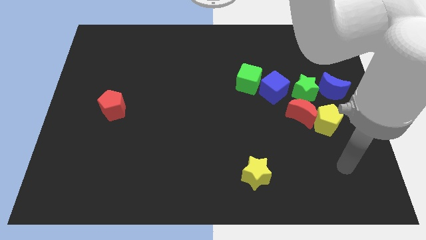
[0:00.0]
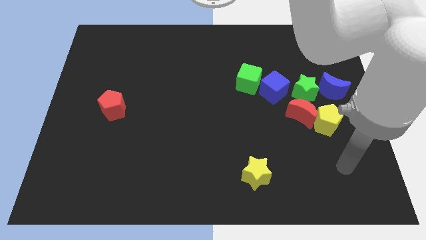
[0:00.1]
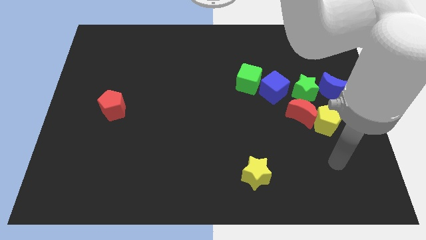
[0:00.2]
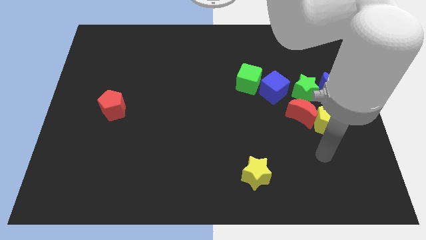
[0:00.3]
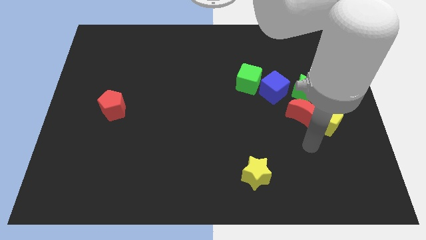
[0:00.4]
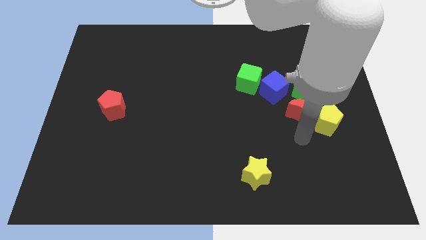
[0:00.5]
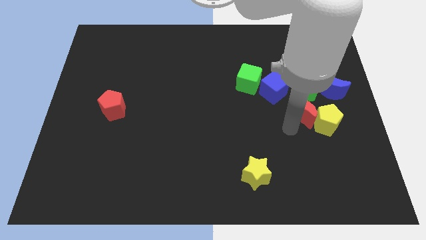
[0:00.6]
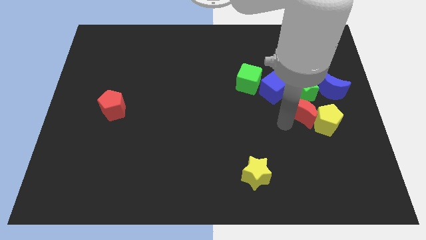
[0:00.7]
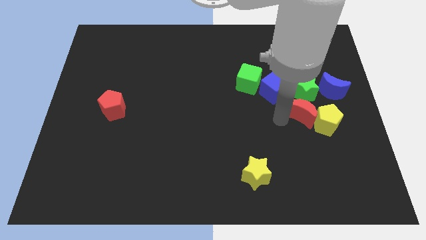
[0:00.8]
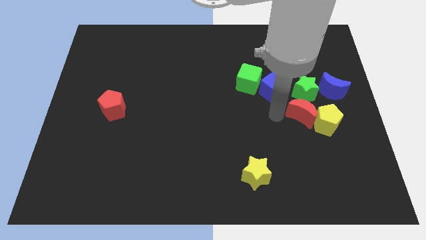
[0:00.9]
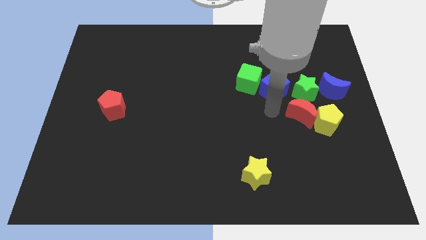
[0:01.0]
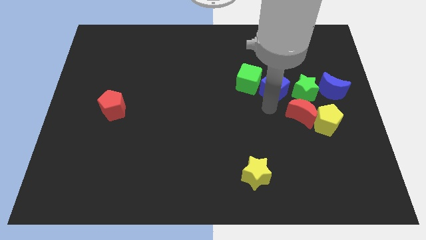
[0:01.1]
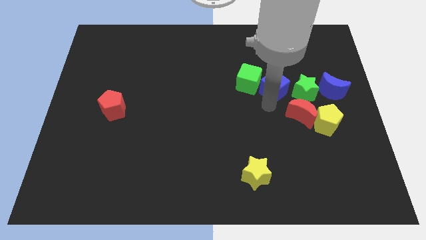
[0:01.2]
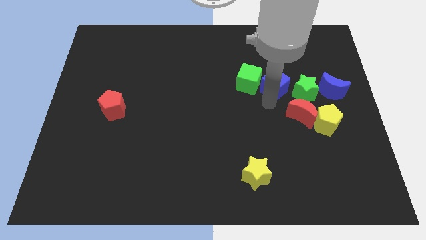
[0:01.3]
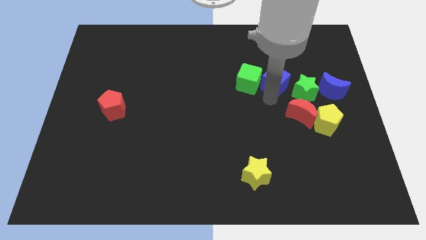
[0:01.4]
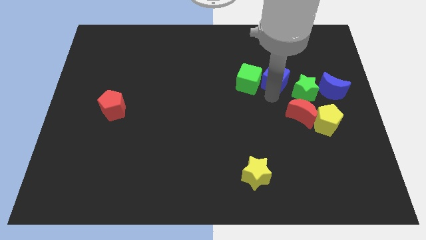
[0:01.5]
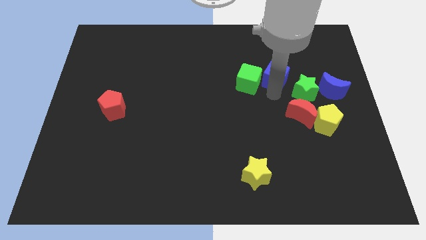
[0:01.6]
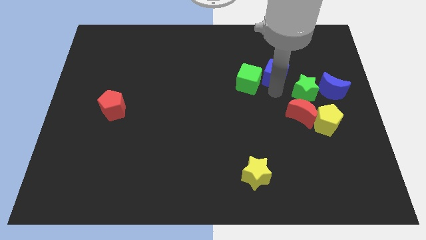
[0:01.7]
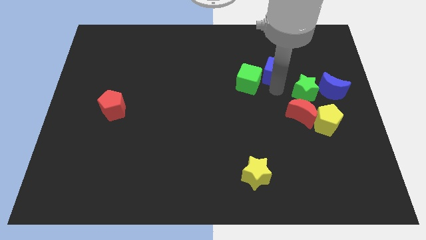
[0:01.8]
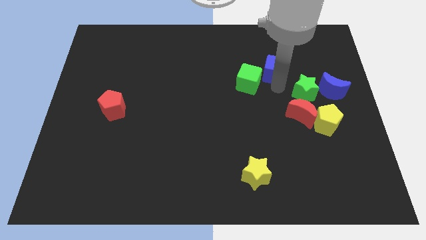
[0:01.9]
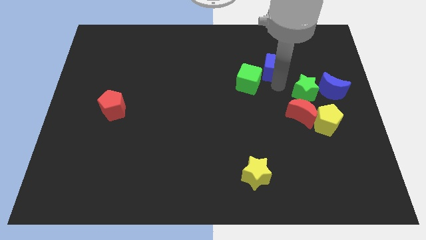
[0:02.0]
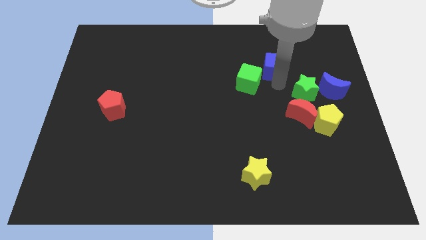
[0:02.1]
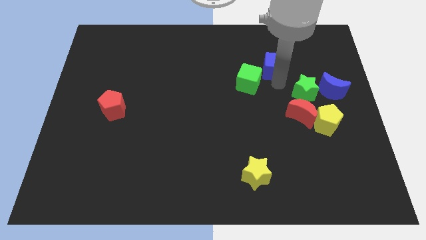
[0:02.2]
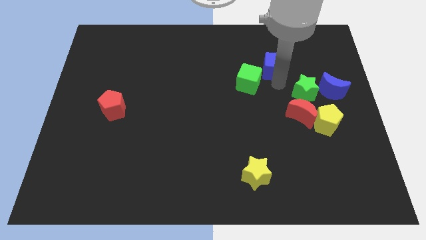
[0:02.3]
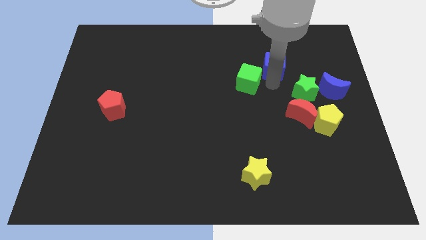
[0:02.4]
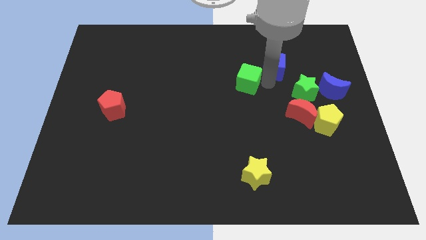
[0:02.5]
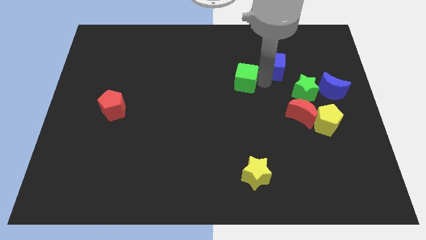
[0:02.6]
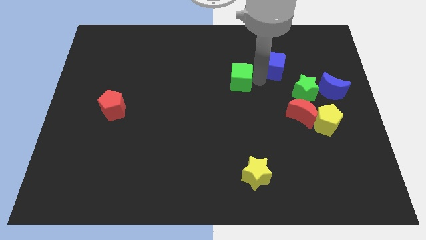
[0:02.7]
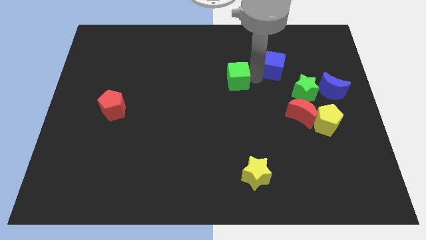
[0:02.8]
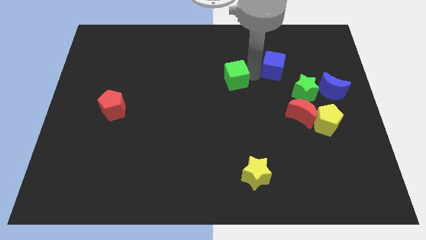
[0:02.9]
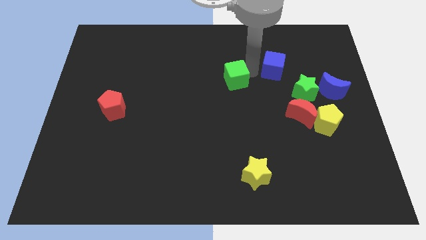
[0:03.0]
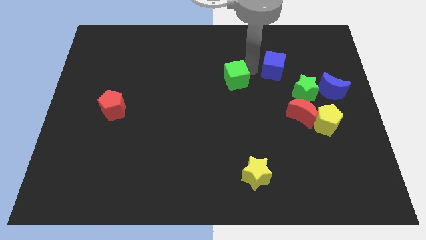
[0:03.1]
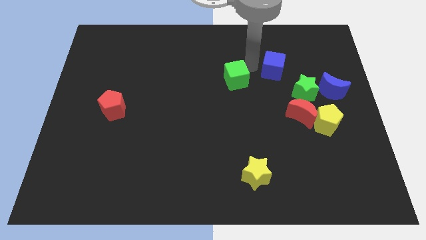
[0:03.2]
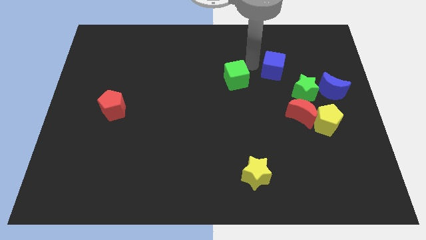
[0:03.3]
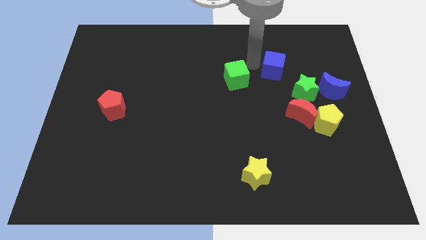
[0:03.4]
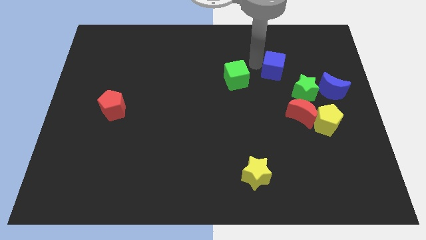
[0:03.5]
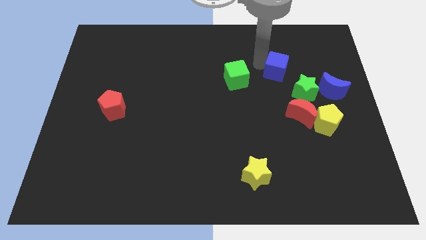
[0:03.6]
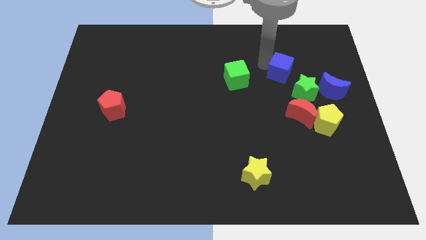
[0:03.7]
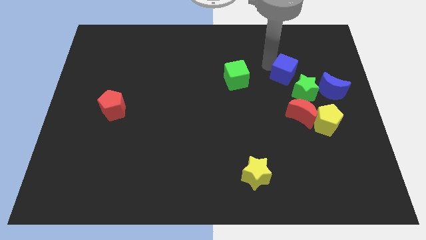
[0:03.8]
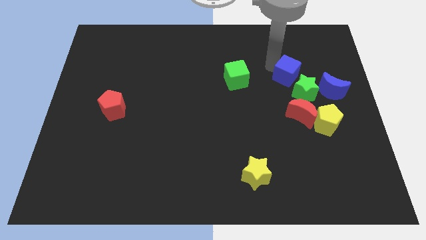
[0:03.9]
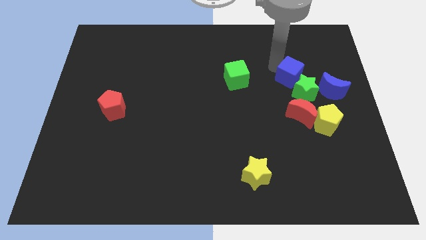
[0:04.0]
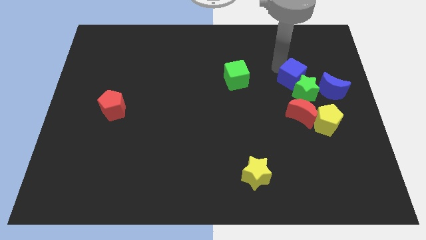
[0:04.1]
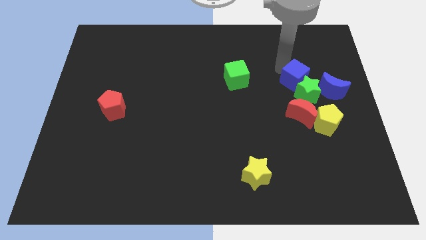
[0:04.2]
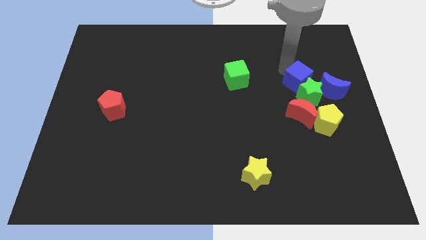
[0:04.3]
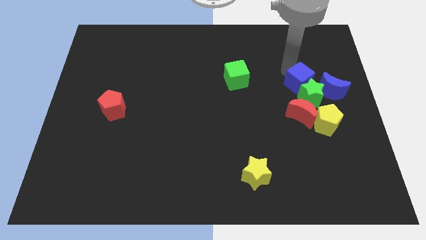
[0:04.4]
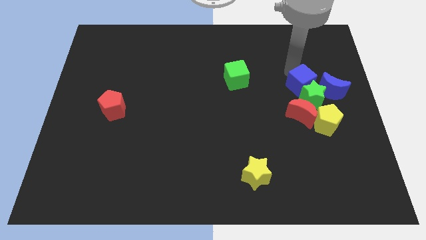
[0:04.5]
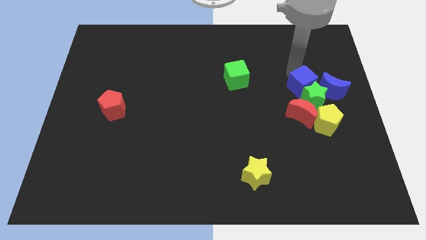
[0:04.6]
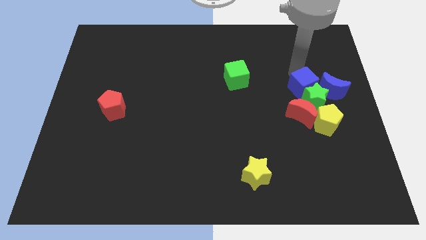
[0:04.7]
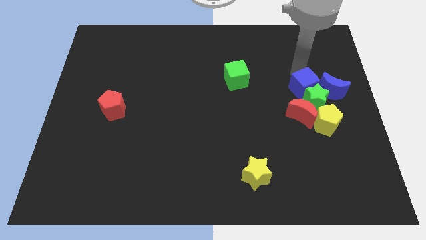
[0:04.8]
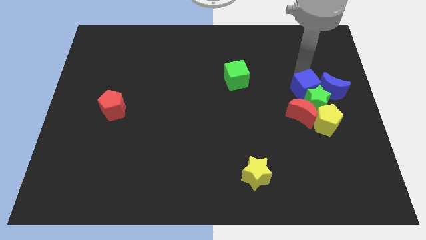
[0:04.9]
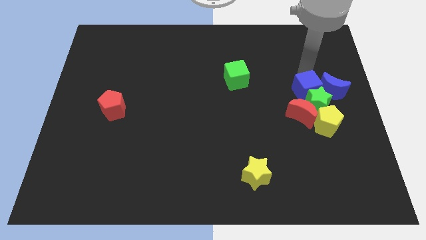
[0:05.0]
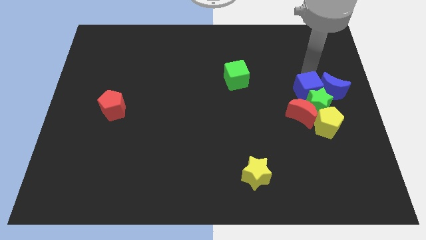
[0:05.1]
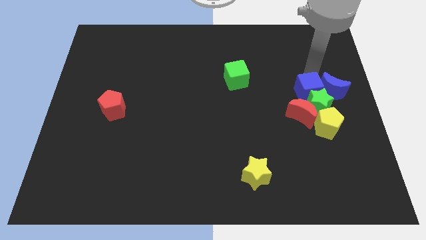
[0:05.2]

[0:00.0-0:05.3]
move the blue cube towards the blue moon

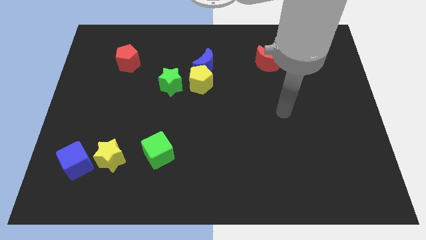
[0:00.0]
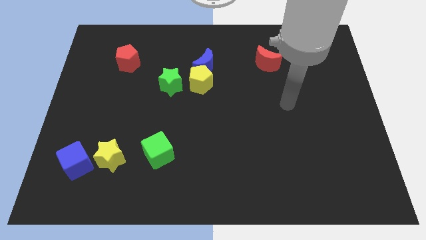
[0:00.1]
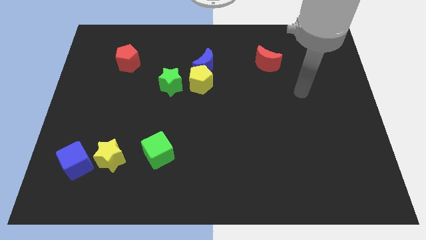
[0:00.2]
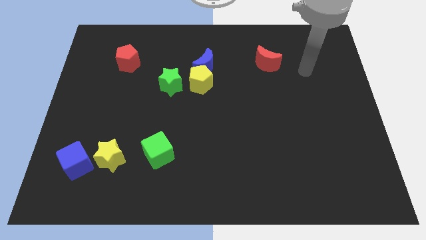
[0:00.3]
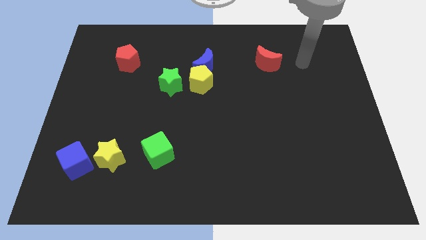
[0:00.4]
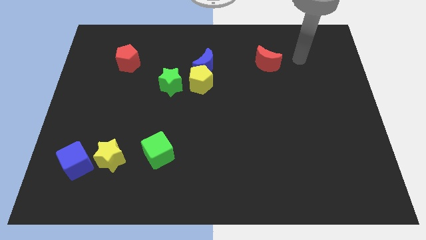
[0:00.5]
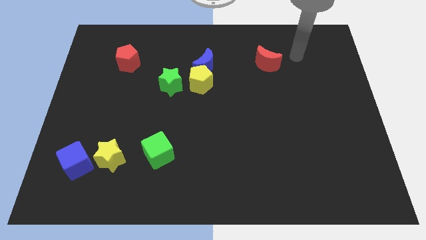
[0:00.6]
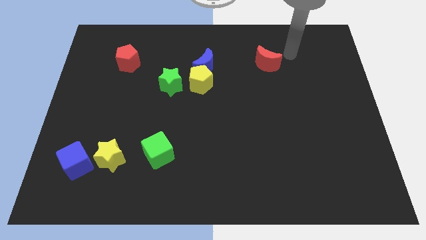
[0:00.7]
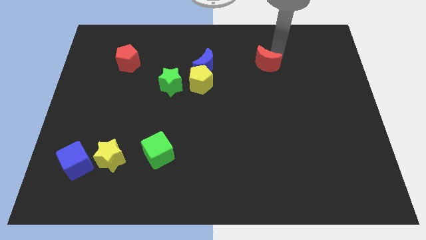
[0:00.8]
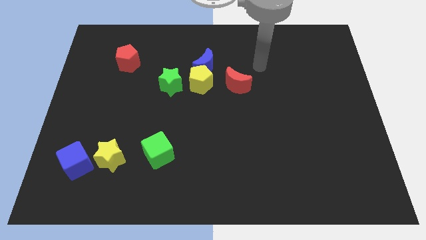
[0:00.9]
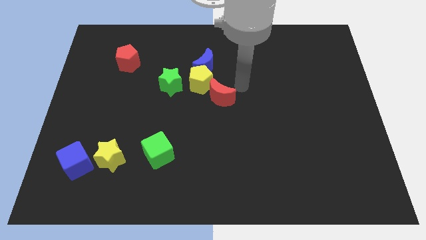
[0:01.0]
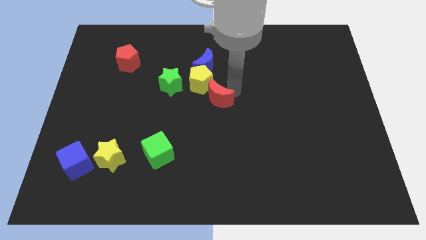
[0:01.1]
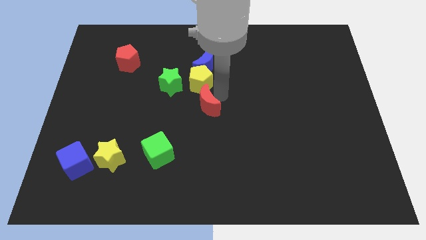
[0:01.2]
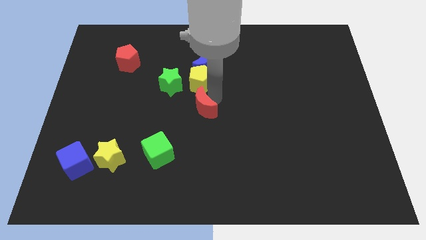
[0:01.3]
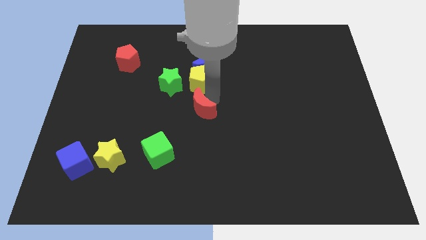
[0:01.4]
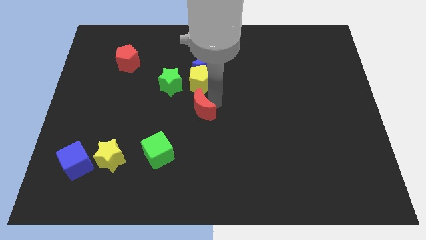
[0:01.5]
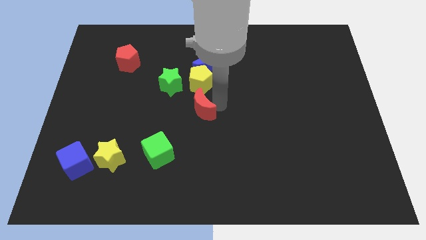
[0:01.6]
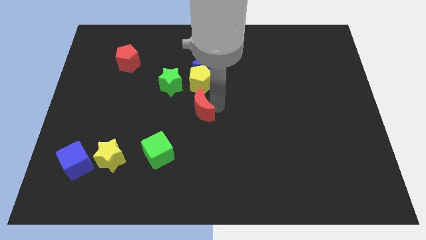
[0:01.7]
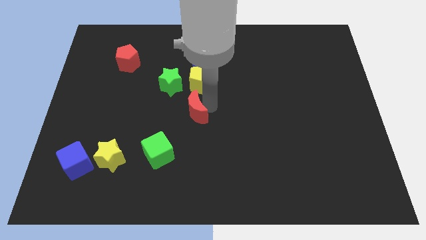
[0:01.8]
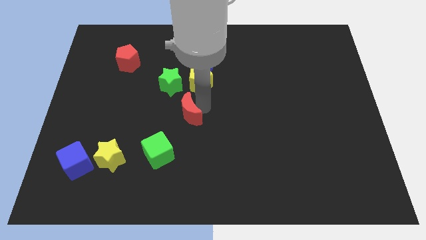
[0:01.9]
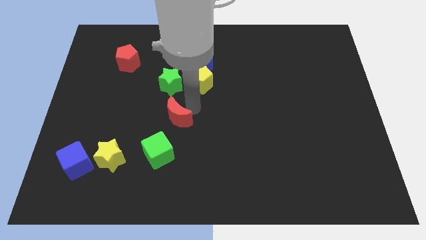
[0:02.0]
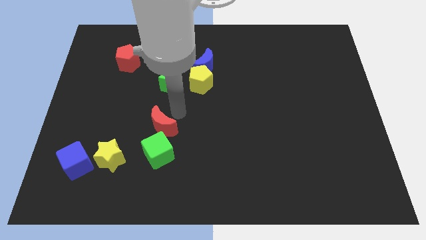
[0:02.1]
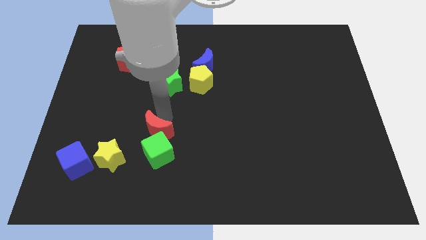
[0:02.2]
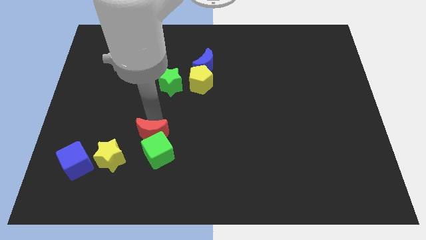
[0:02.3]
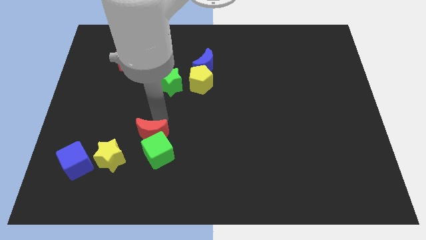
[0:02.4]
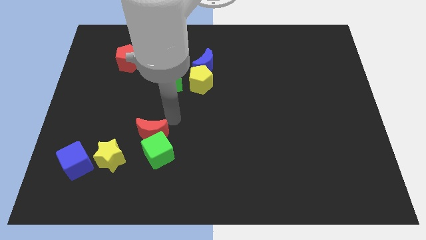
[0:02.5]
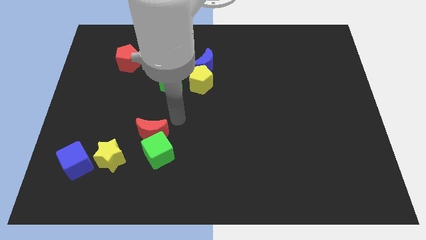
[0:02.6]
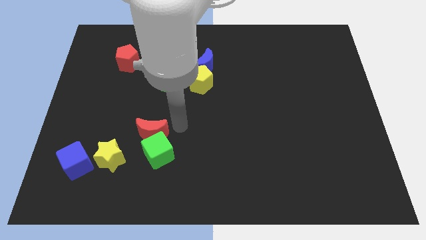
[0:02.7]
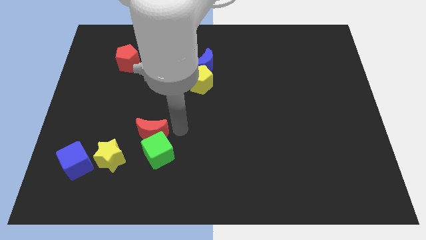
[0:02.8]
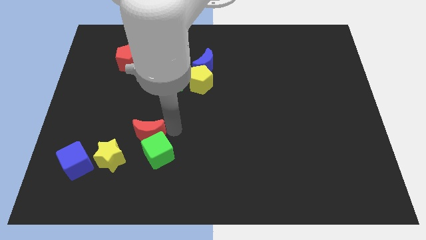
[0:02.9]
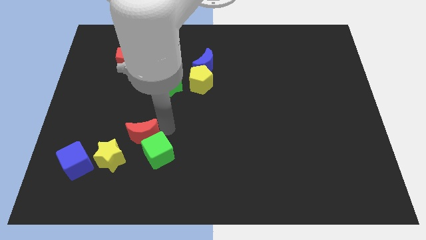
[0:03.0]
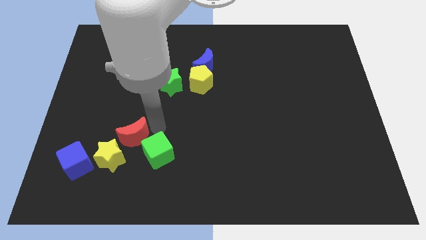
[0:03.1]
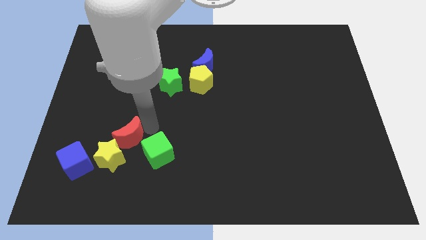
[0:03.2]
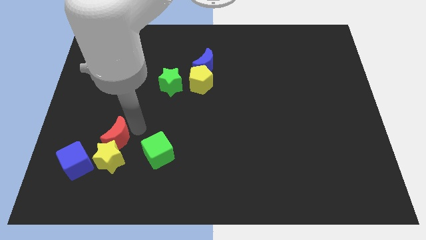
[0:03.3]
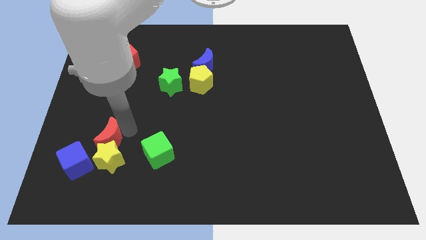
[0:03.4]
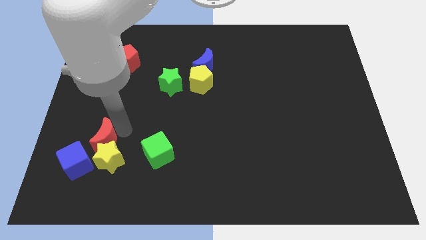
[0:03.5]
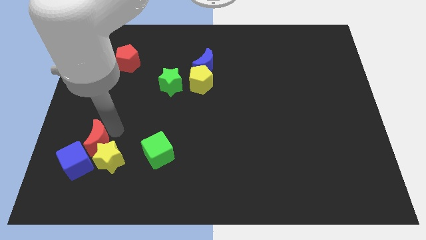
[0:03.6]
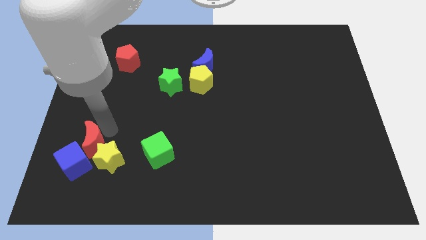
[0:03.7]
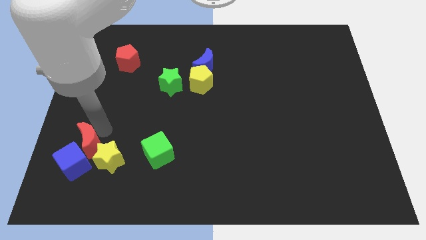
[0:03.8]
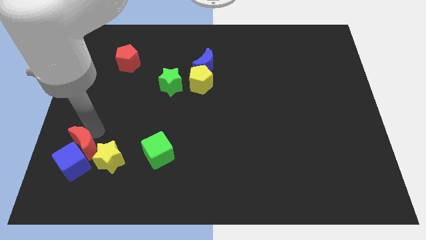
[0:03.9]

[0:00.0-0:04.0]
slide the red moon close to the blue cube
